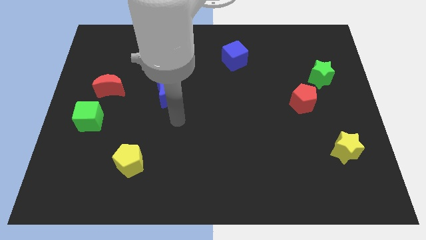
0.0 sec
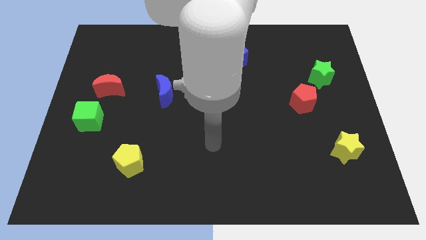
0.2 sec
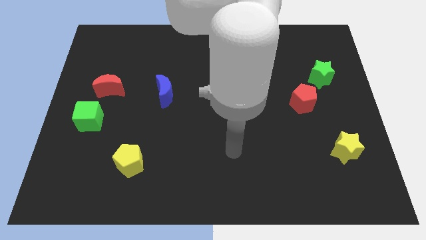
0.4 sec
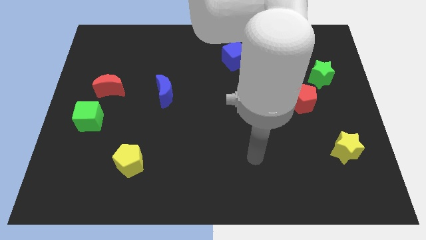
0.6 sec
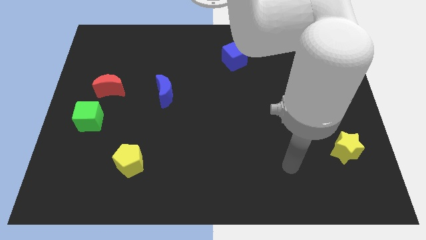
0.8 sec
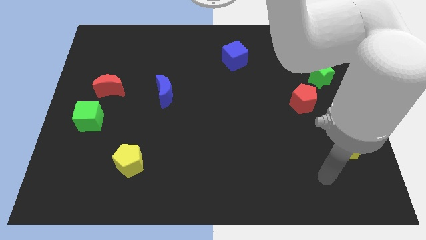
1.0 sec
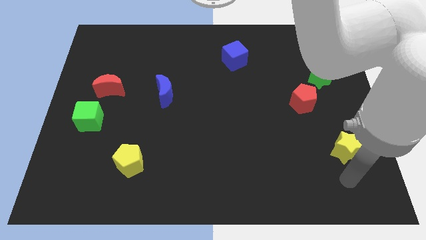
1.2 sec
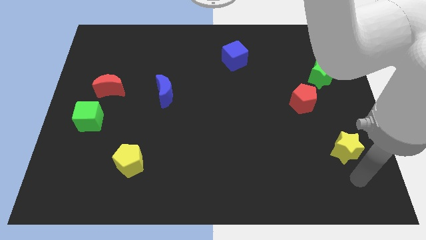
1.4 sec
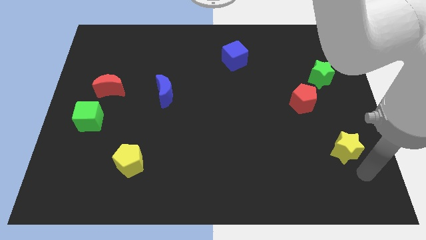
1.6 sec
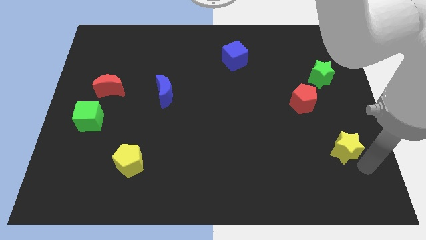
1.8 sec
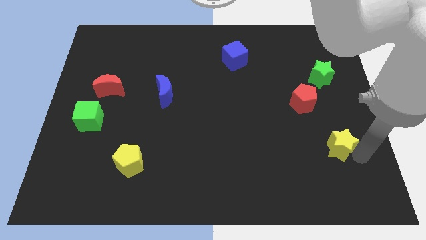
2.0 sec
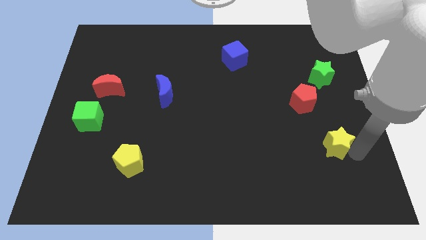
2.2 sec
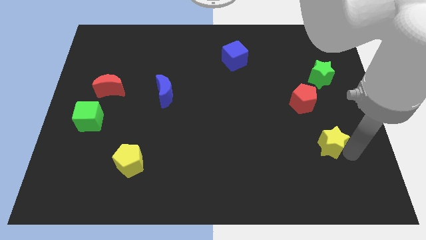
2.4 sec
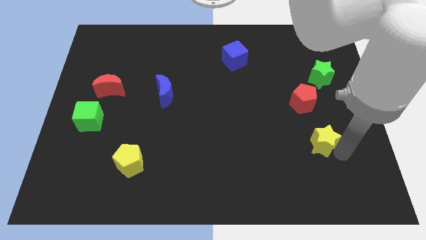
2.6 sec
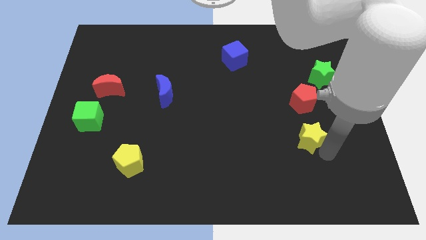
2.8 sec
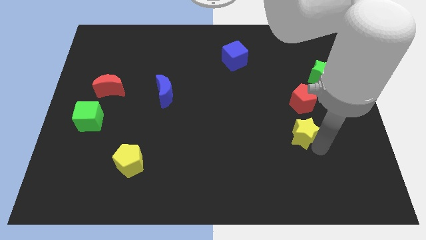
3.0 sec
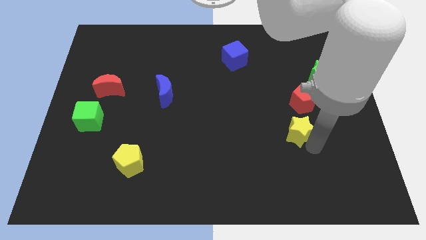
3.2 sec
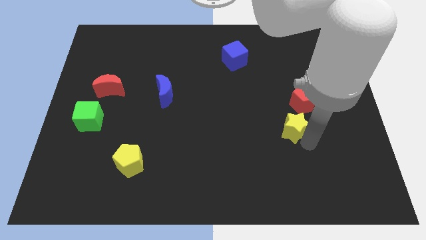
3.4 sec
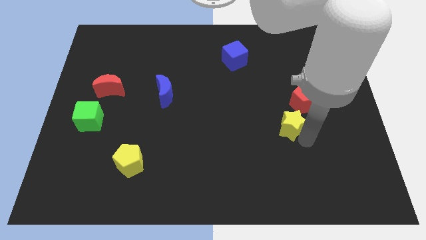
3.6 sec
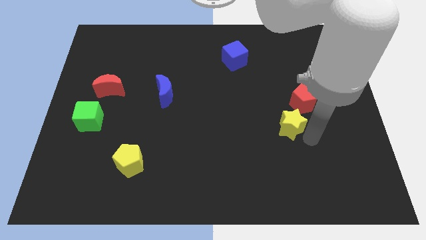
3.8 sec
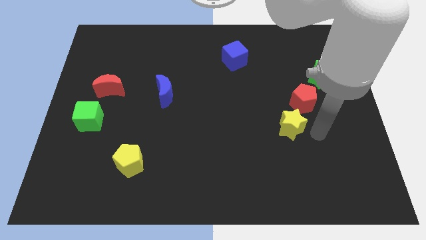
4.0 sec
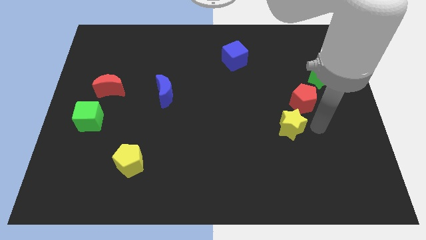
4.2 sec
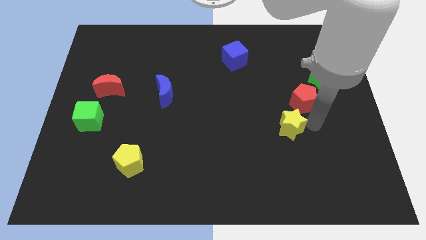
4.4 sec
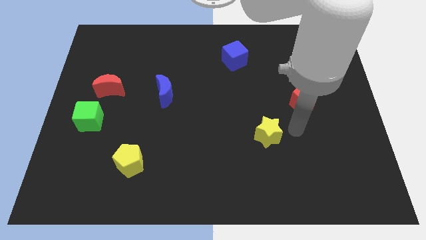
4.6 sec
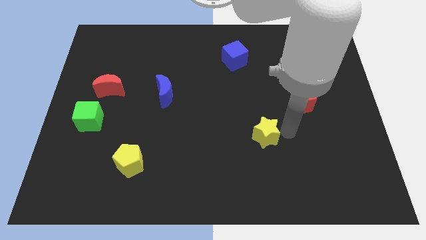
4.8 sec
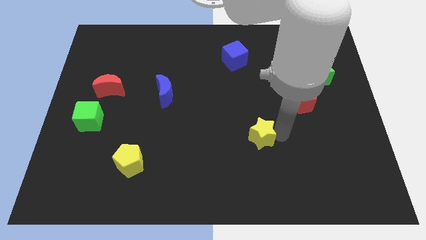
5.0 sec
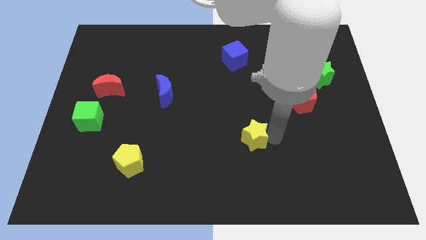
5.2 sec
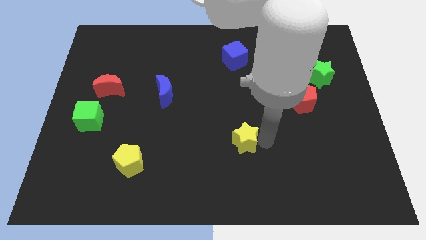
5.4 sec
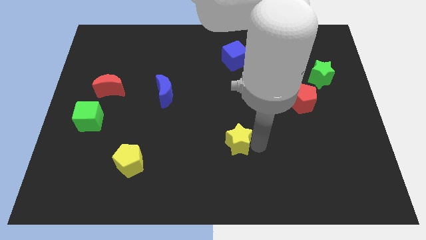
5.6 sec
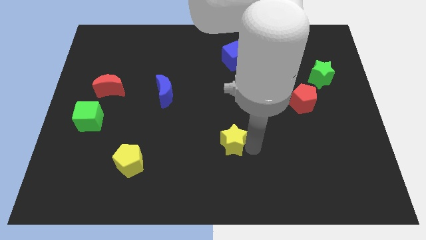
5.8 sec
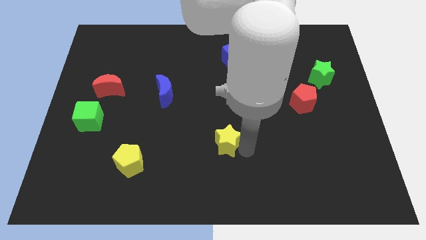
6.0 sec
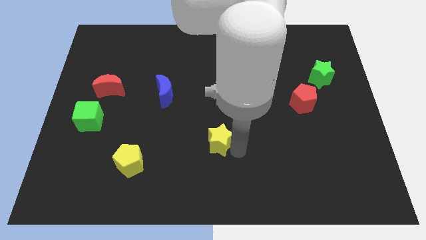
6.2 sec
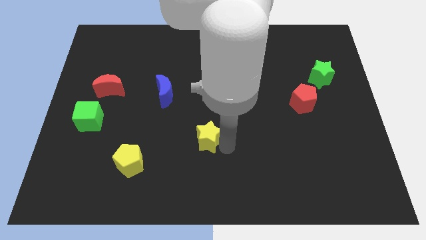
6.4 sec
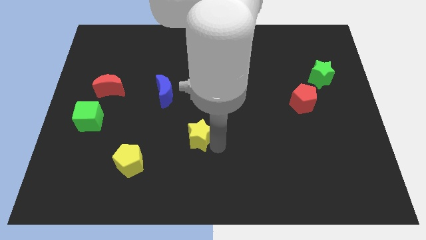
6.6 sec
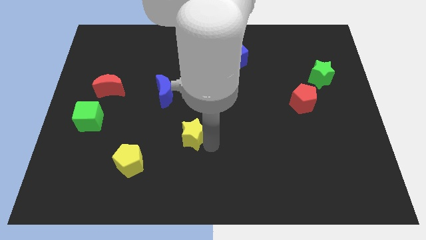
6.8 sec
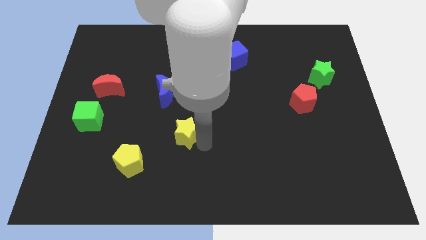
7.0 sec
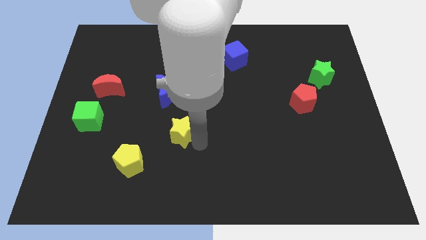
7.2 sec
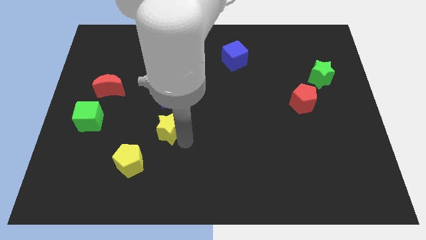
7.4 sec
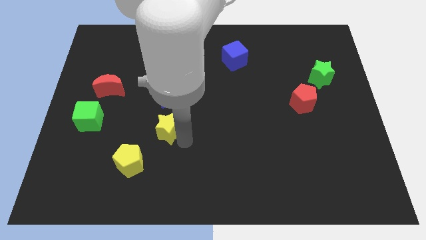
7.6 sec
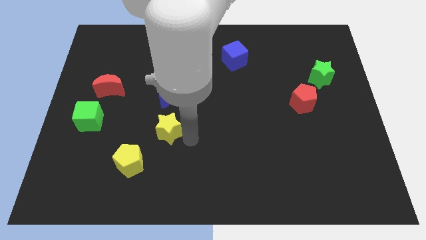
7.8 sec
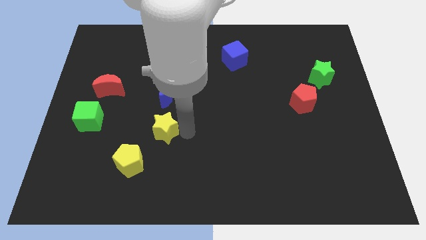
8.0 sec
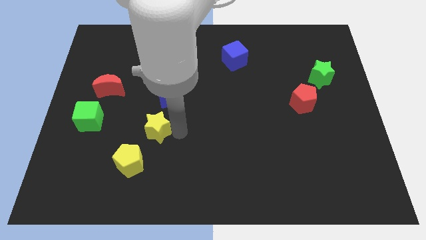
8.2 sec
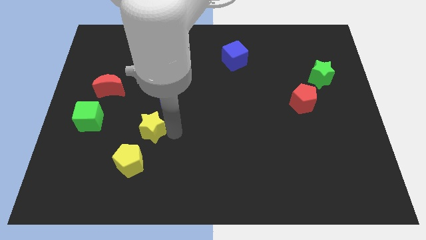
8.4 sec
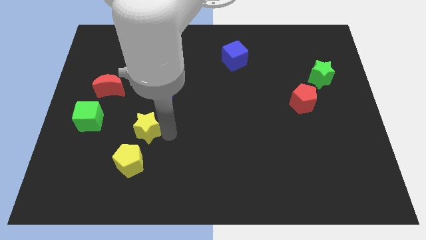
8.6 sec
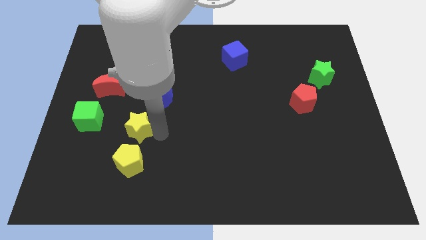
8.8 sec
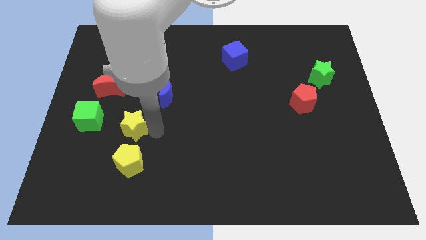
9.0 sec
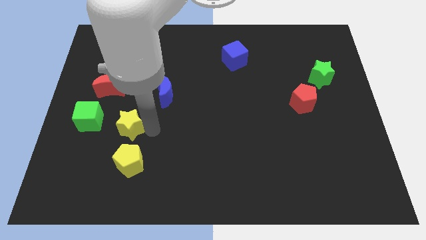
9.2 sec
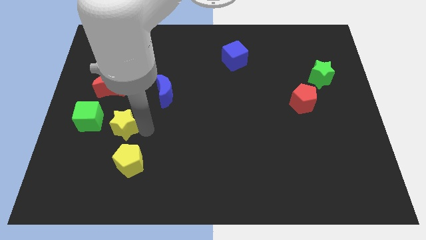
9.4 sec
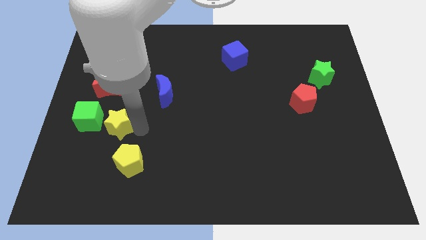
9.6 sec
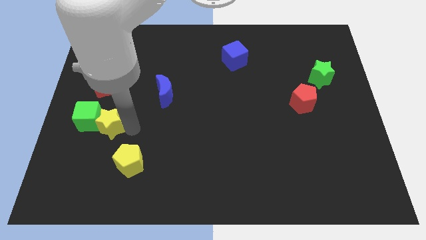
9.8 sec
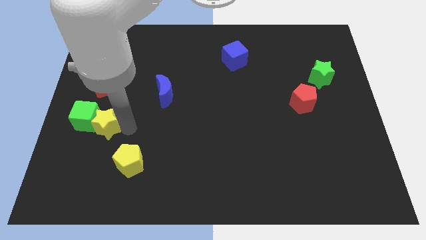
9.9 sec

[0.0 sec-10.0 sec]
move the yellow star next to the green cube

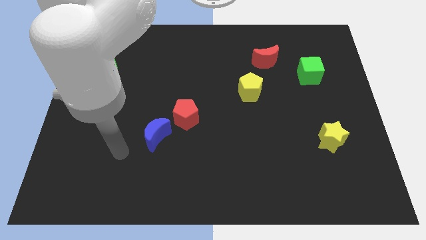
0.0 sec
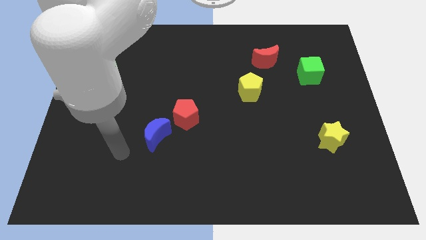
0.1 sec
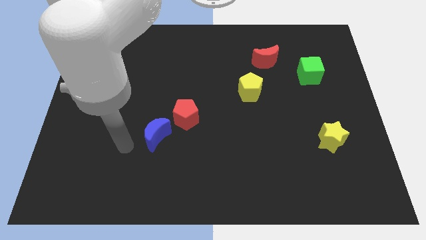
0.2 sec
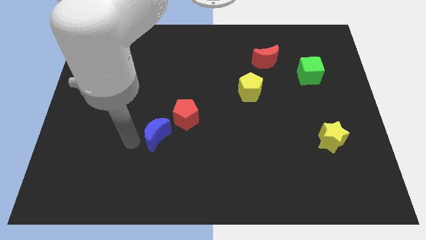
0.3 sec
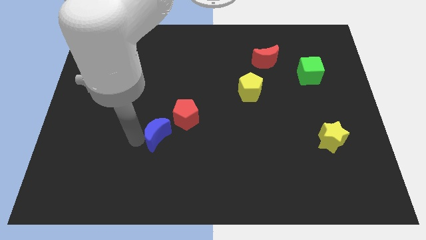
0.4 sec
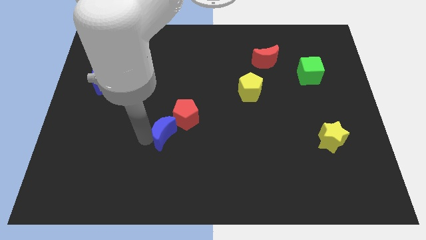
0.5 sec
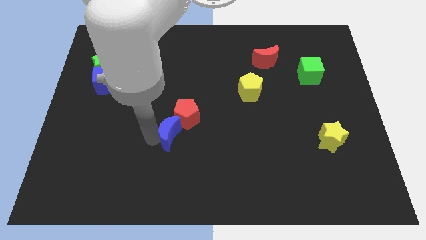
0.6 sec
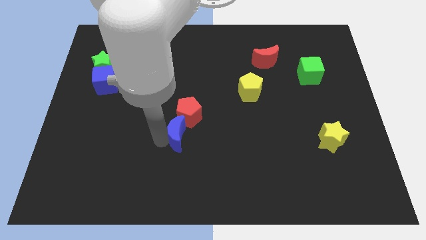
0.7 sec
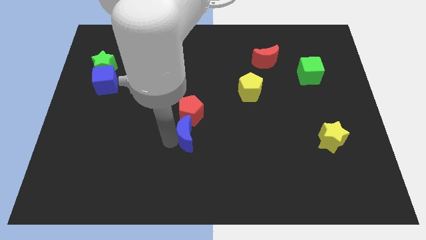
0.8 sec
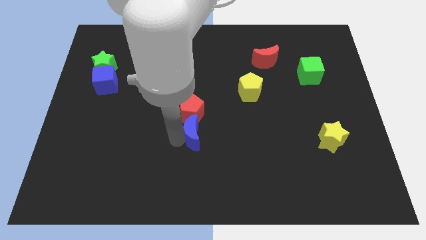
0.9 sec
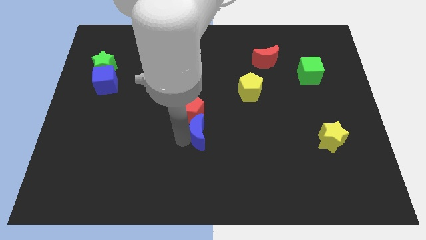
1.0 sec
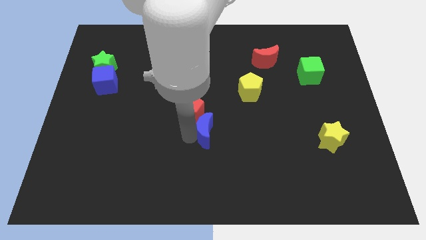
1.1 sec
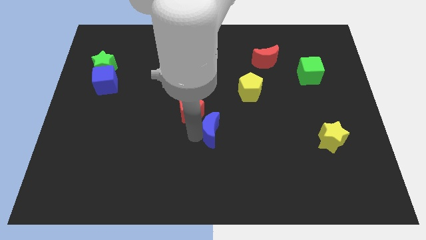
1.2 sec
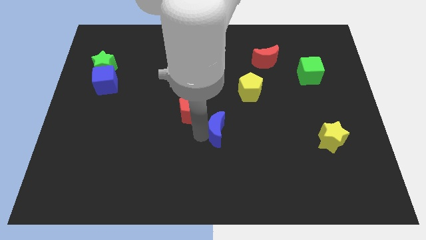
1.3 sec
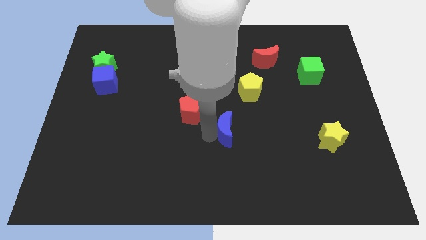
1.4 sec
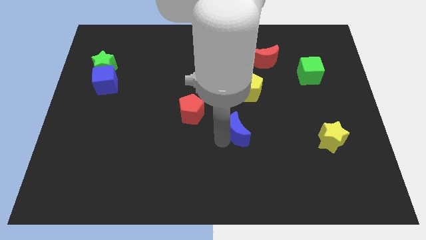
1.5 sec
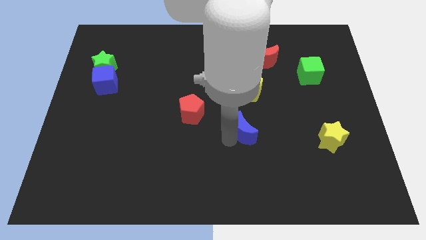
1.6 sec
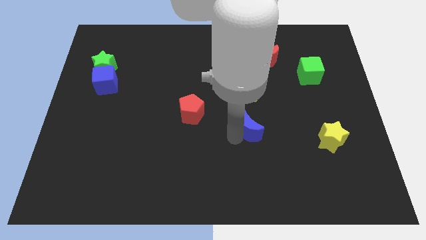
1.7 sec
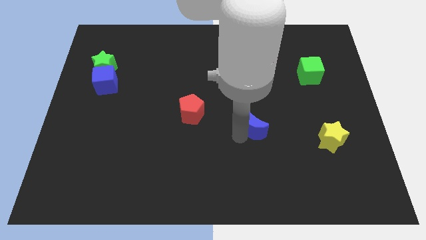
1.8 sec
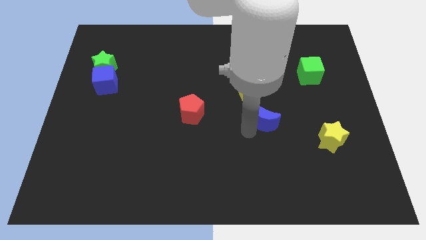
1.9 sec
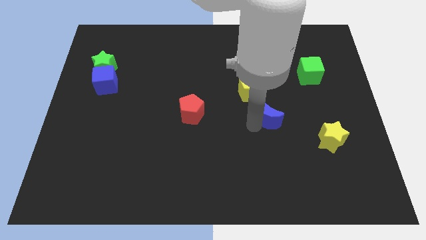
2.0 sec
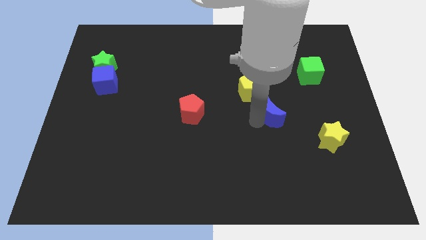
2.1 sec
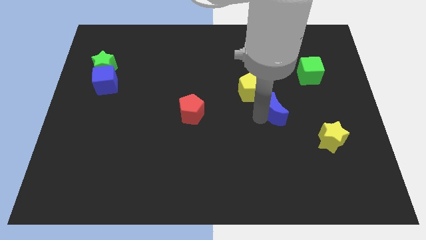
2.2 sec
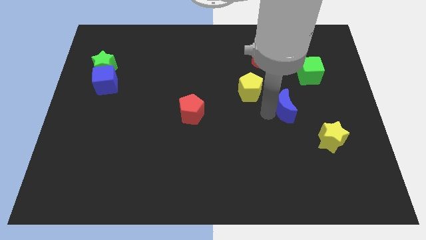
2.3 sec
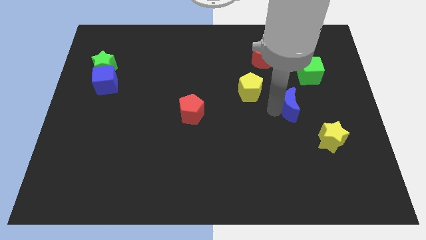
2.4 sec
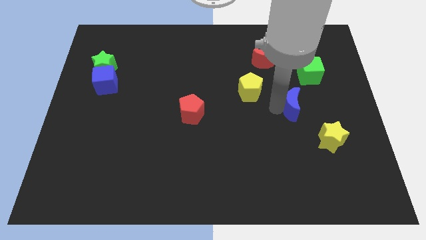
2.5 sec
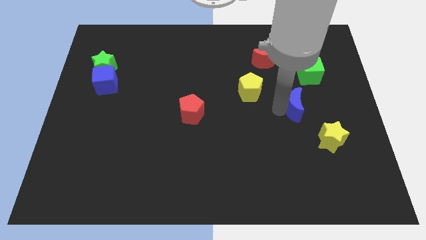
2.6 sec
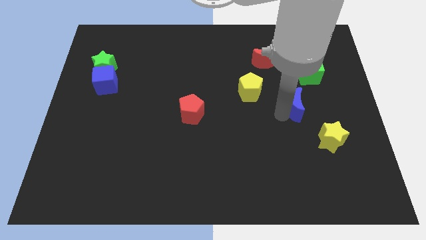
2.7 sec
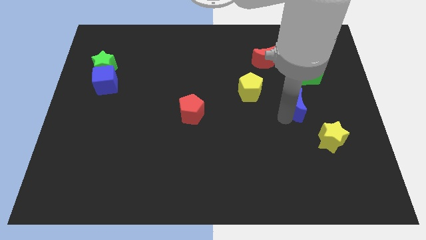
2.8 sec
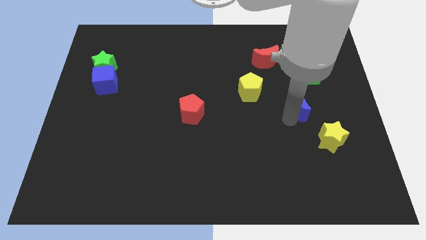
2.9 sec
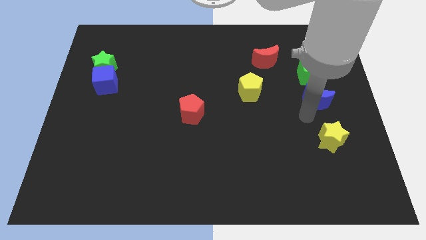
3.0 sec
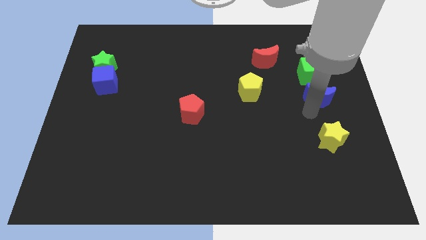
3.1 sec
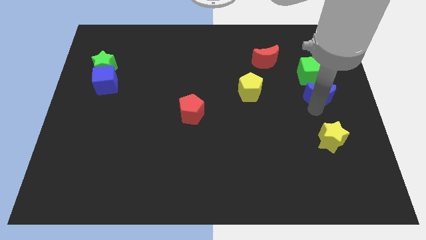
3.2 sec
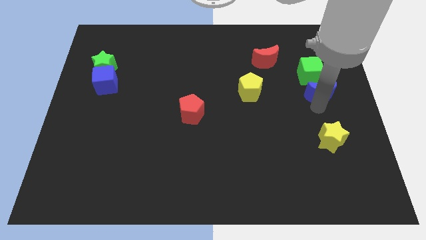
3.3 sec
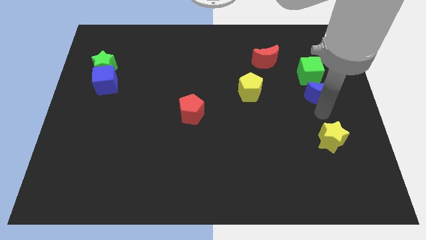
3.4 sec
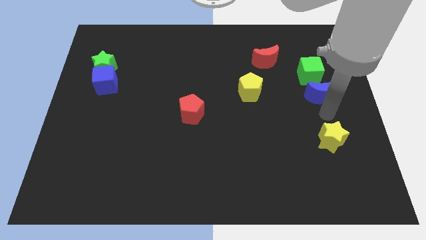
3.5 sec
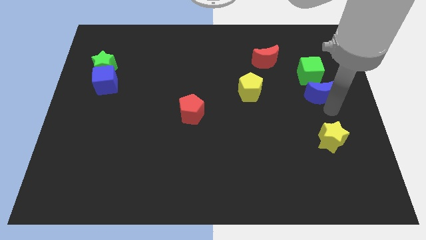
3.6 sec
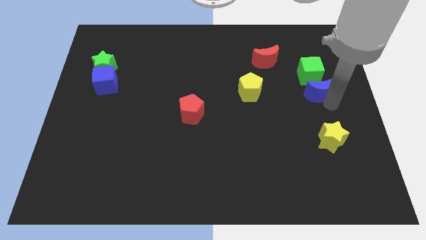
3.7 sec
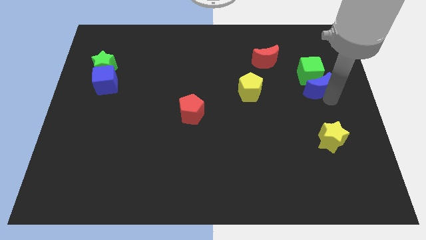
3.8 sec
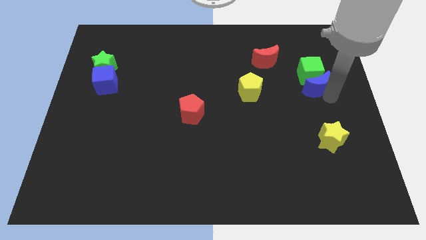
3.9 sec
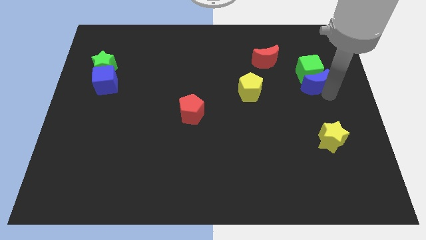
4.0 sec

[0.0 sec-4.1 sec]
put the blue moon close to the green cube

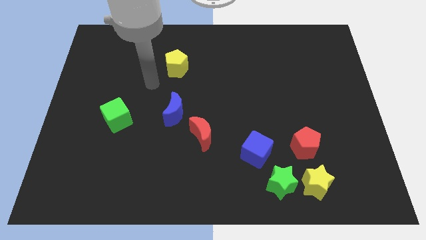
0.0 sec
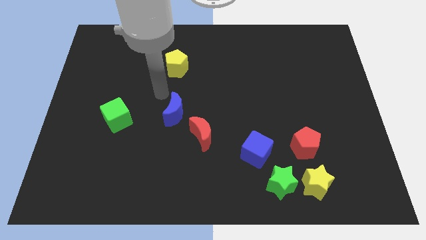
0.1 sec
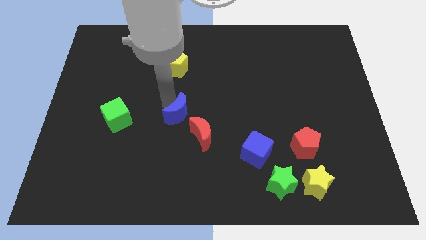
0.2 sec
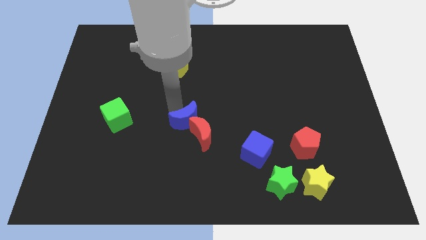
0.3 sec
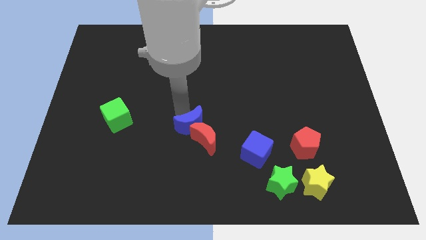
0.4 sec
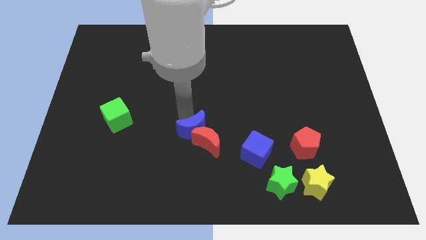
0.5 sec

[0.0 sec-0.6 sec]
put the blue moon close to the red moon
